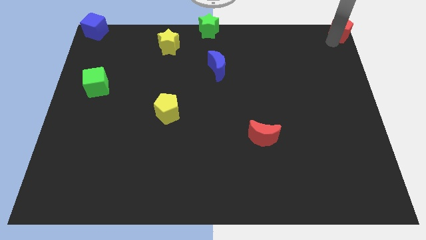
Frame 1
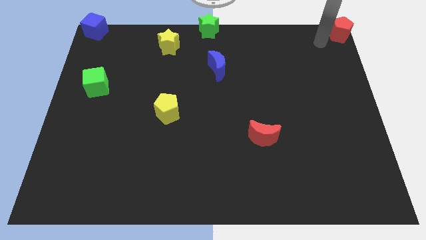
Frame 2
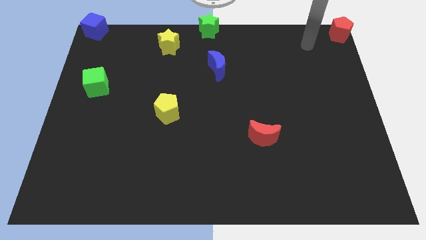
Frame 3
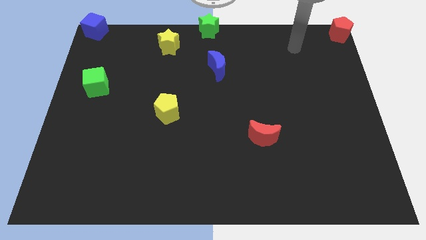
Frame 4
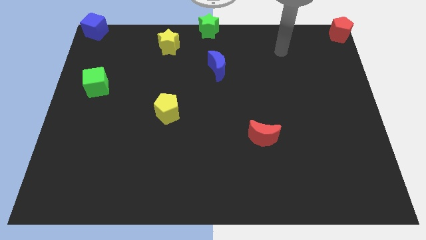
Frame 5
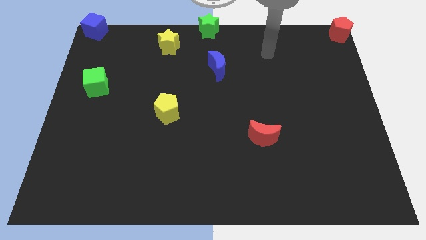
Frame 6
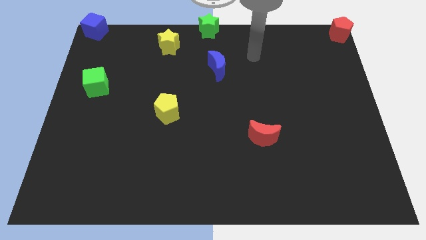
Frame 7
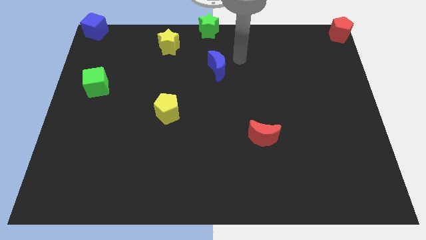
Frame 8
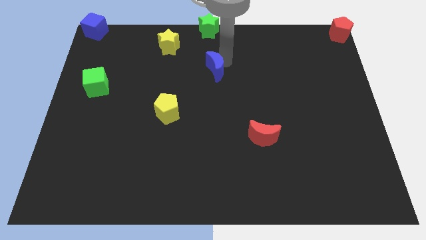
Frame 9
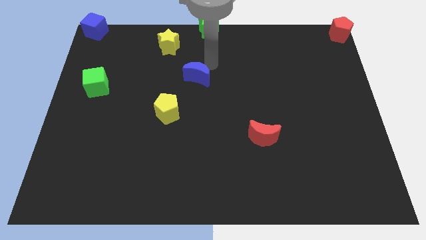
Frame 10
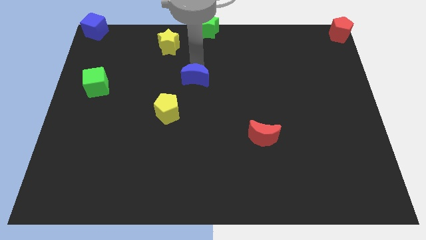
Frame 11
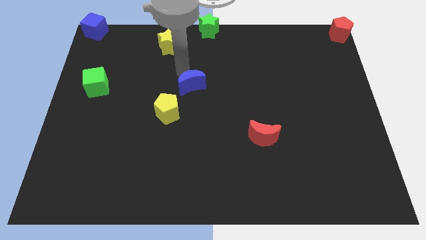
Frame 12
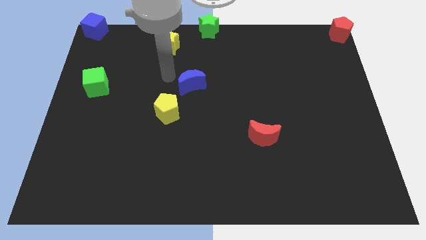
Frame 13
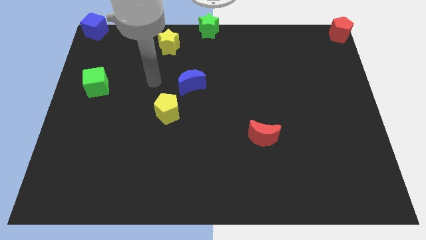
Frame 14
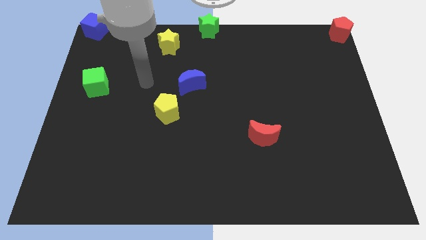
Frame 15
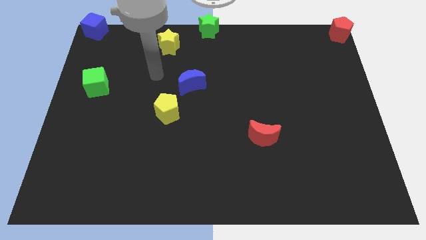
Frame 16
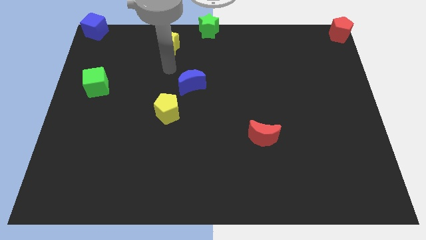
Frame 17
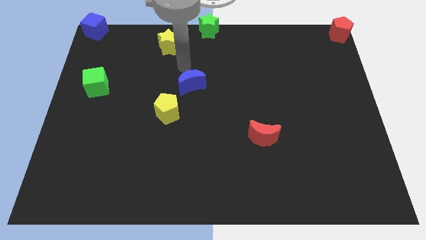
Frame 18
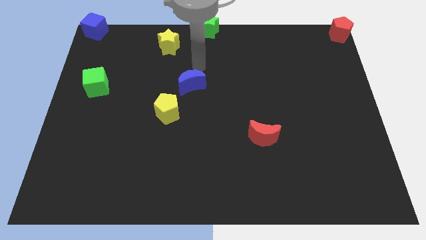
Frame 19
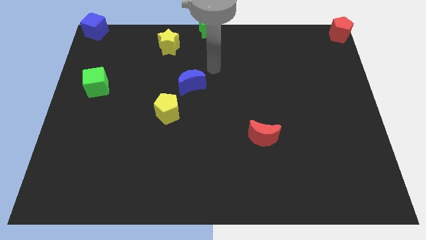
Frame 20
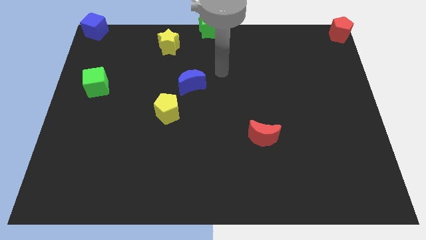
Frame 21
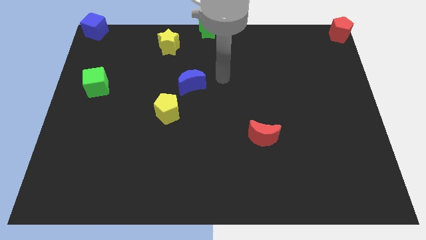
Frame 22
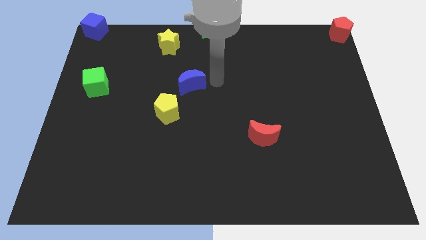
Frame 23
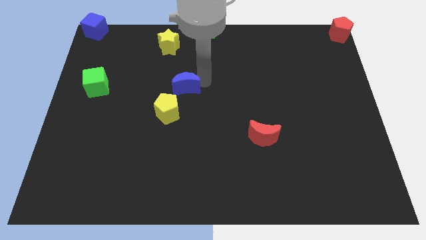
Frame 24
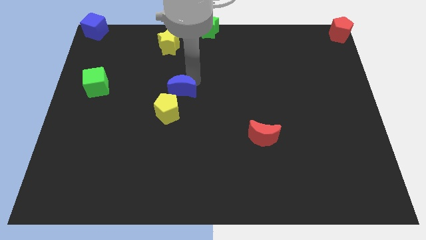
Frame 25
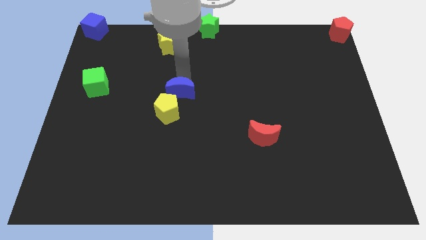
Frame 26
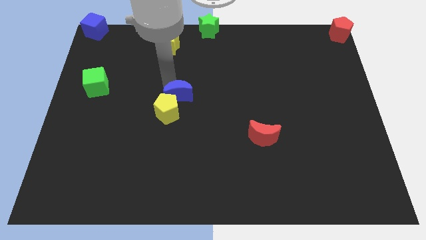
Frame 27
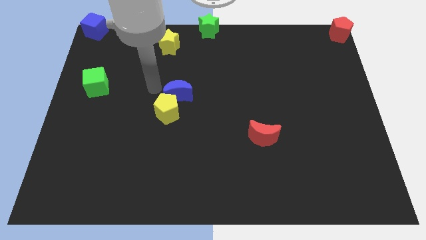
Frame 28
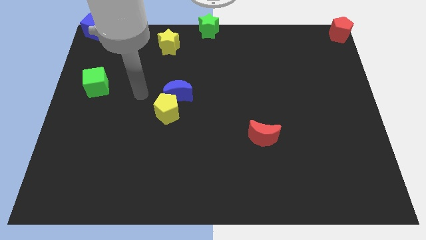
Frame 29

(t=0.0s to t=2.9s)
move the blue moon towards the yellow pentagon

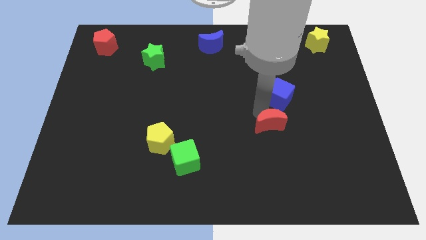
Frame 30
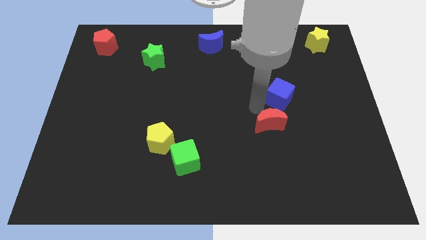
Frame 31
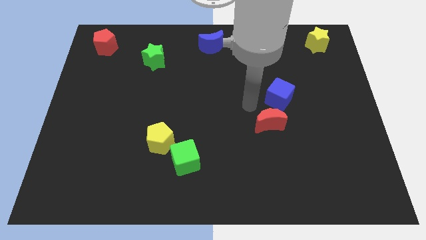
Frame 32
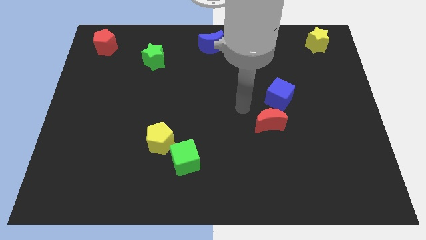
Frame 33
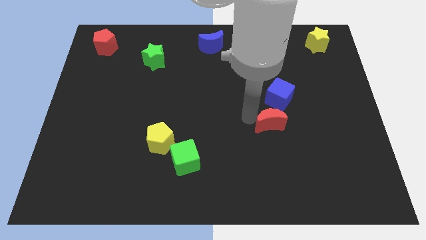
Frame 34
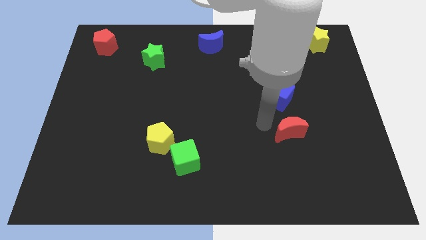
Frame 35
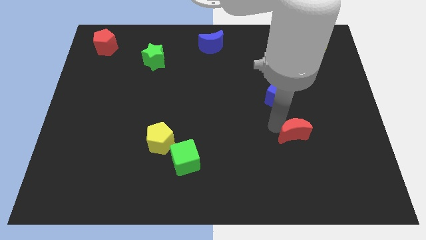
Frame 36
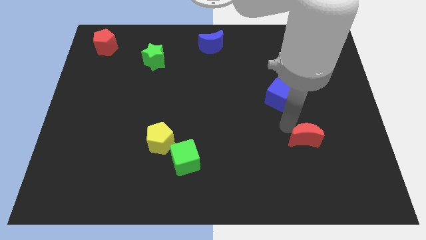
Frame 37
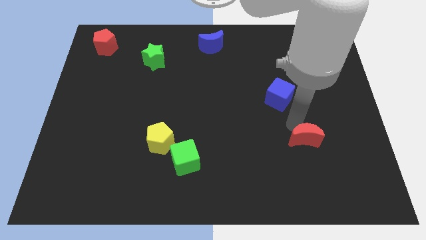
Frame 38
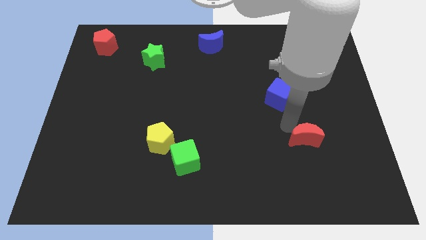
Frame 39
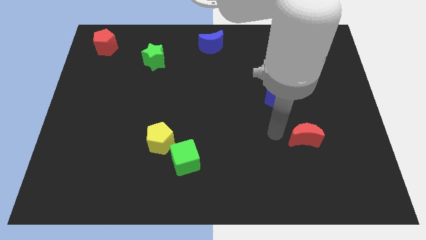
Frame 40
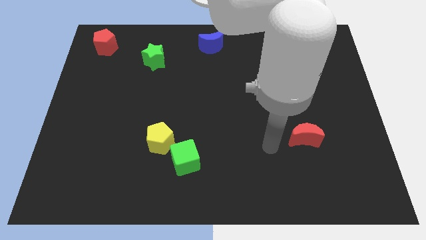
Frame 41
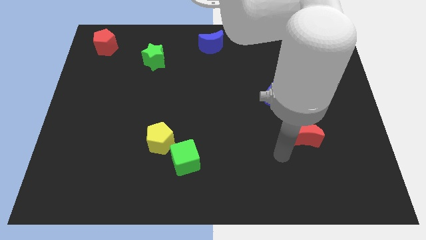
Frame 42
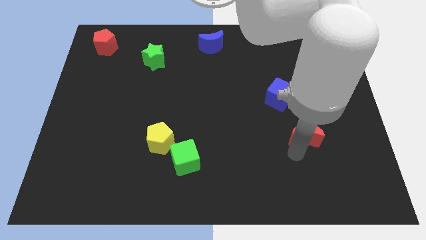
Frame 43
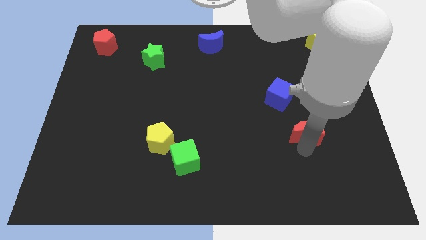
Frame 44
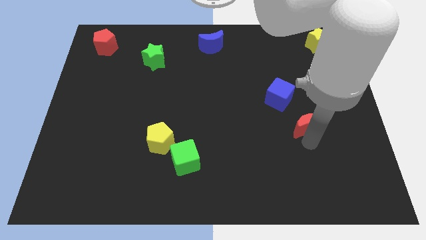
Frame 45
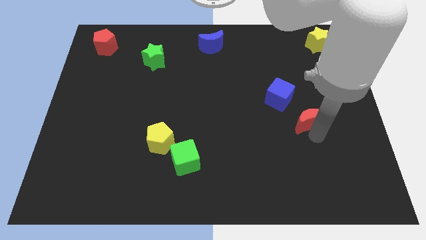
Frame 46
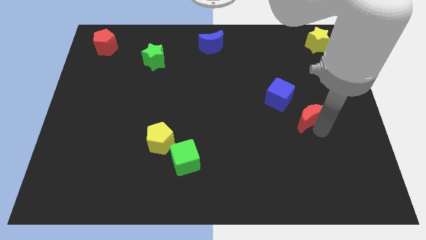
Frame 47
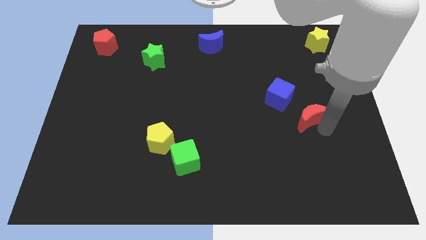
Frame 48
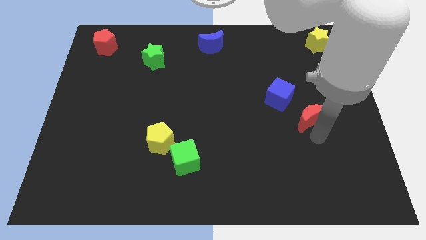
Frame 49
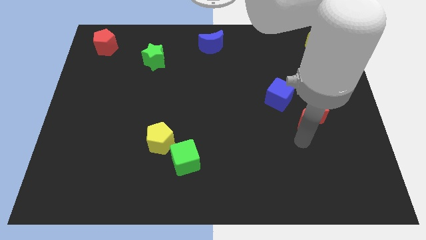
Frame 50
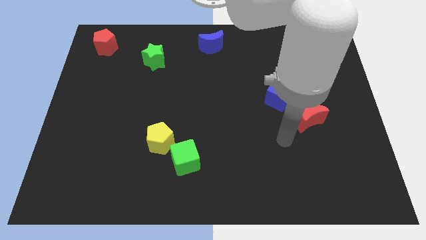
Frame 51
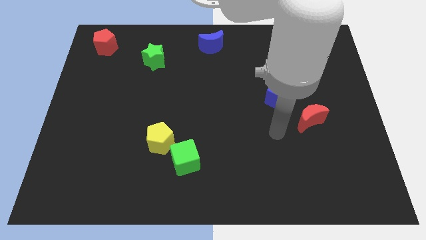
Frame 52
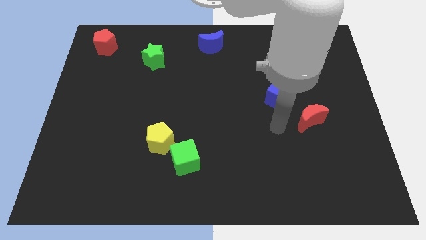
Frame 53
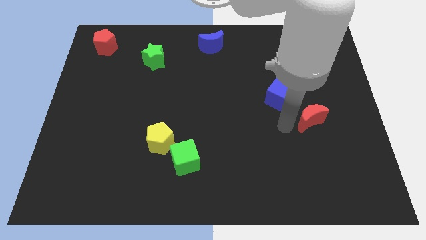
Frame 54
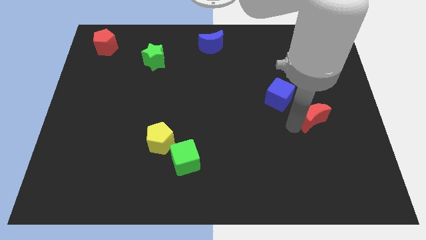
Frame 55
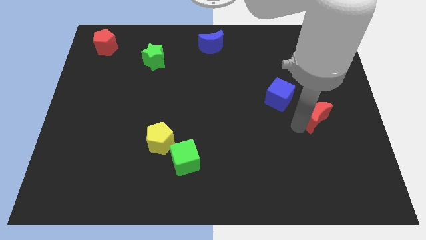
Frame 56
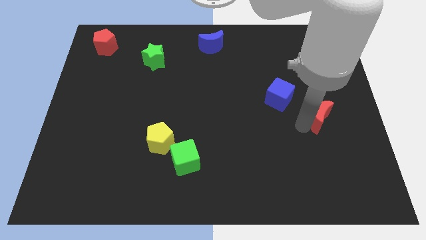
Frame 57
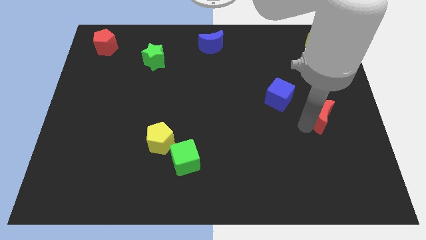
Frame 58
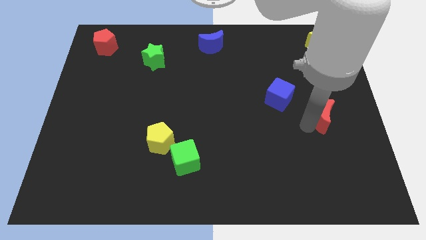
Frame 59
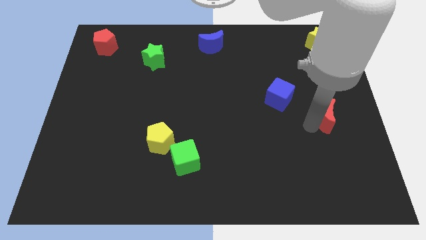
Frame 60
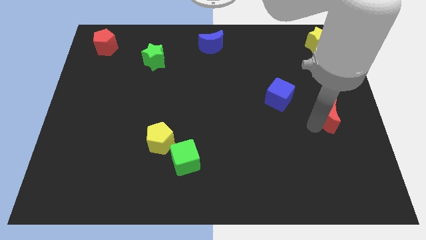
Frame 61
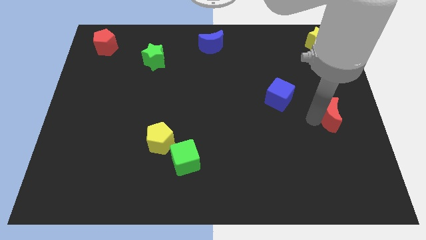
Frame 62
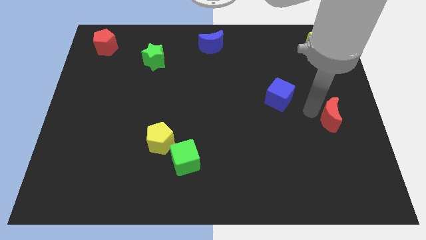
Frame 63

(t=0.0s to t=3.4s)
move the red crescent to the bottom of the yellow star

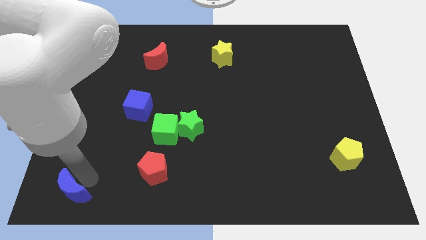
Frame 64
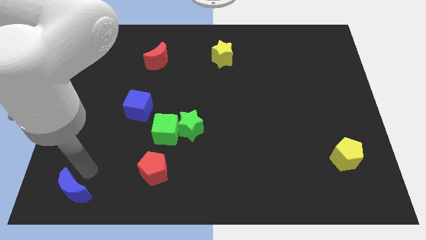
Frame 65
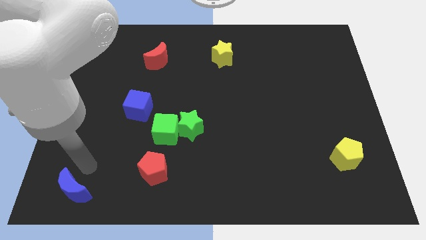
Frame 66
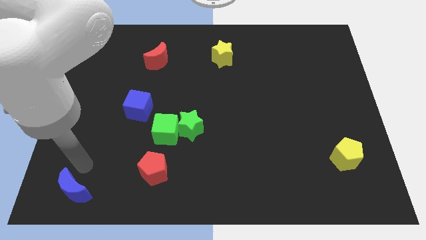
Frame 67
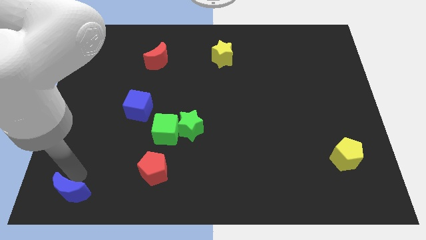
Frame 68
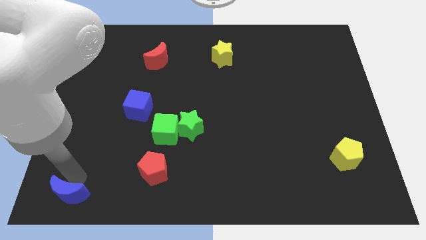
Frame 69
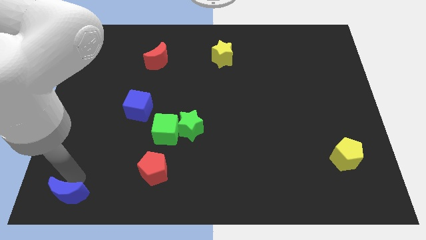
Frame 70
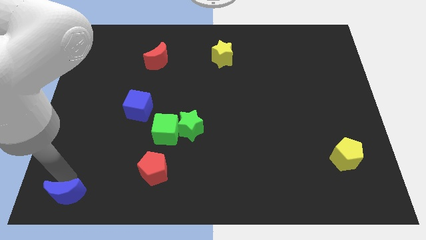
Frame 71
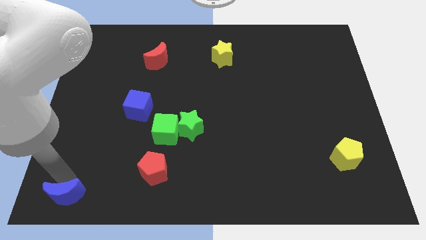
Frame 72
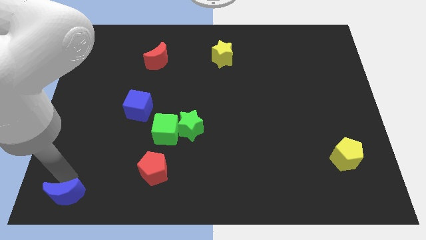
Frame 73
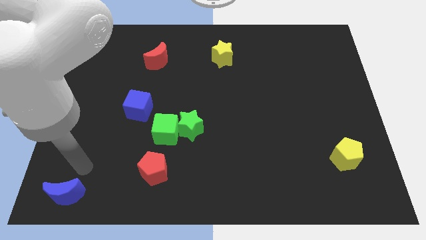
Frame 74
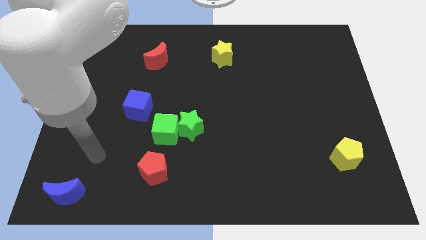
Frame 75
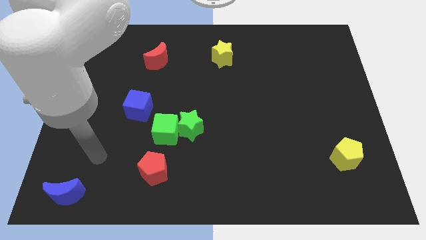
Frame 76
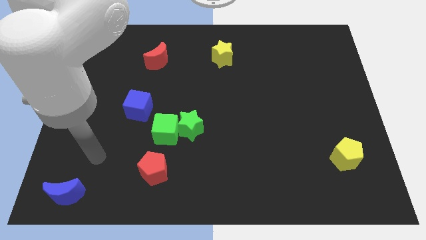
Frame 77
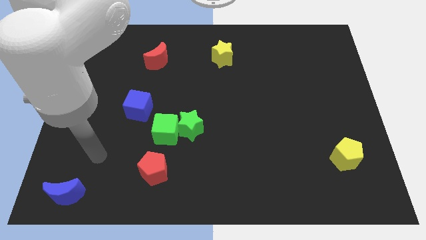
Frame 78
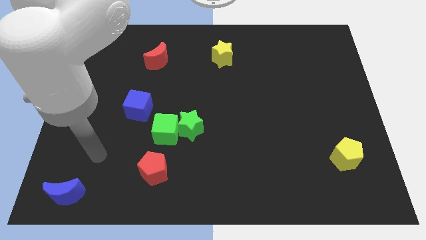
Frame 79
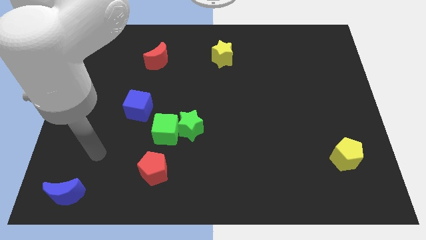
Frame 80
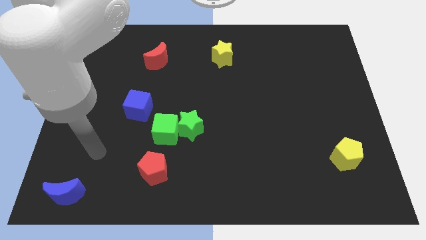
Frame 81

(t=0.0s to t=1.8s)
move the blue cube to the bottom left of the board

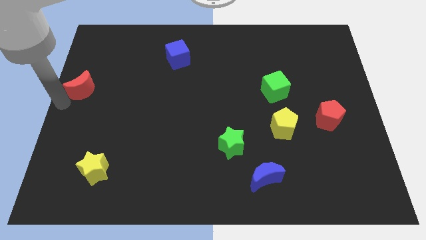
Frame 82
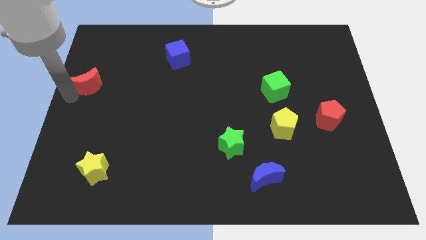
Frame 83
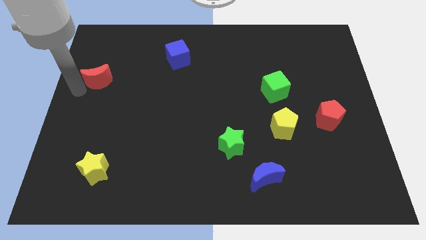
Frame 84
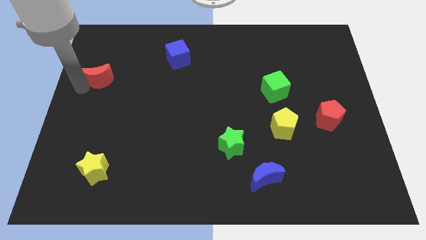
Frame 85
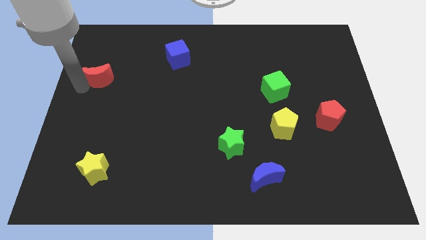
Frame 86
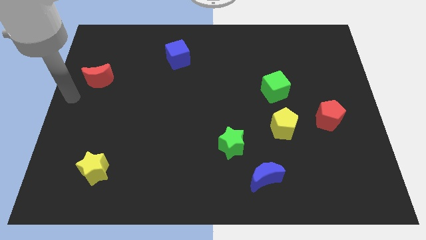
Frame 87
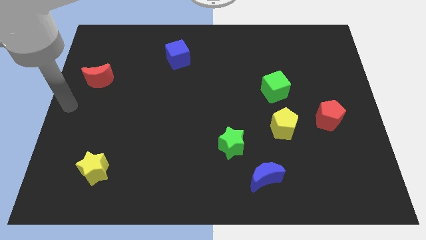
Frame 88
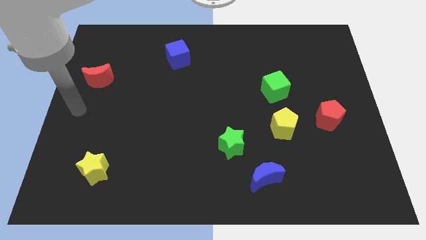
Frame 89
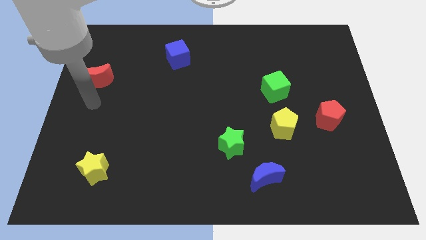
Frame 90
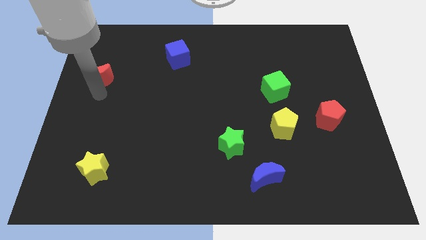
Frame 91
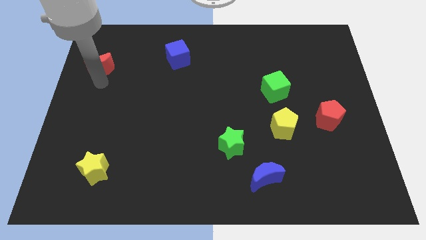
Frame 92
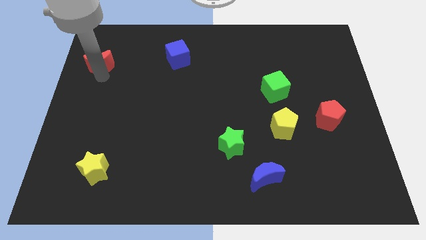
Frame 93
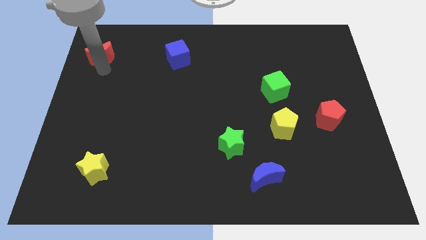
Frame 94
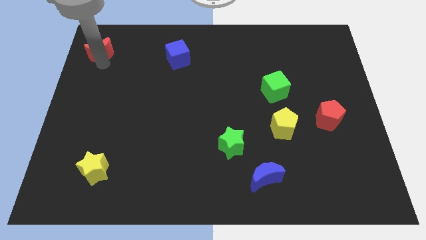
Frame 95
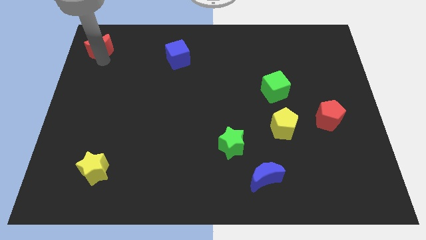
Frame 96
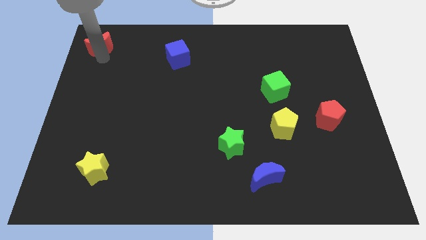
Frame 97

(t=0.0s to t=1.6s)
push the red moon to the top left side of the board
